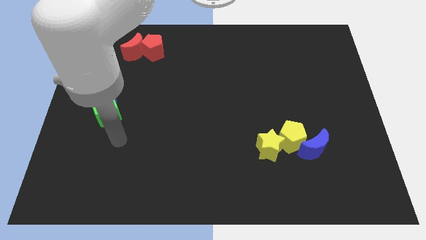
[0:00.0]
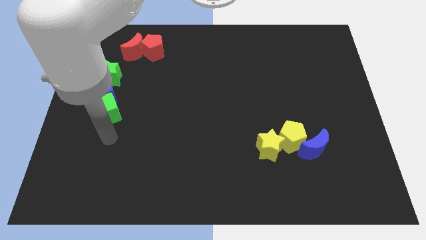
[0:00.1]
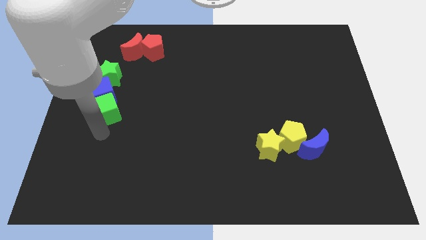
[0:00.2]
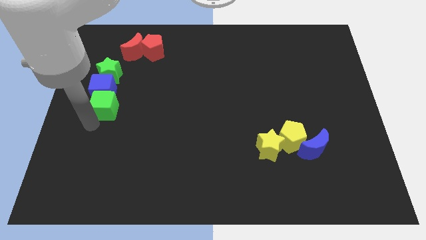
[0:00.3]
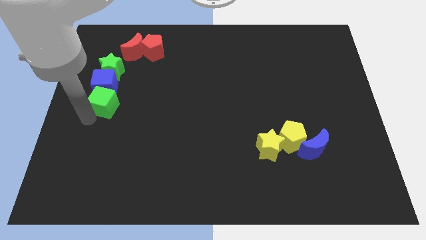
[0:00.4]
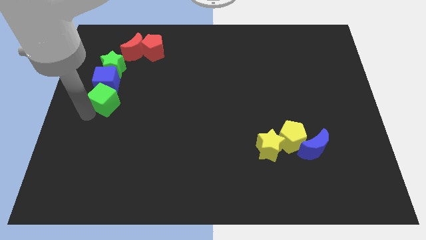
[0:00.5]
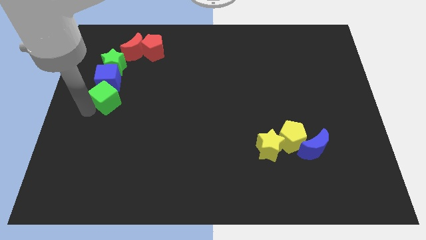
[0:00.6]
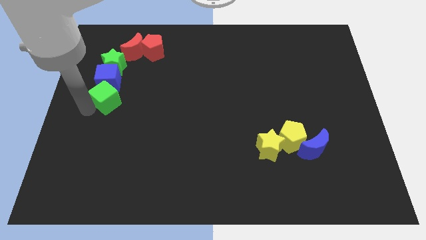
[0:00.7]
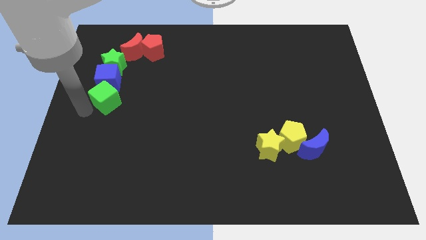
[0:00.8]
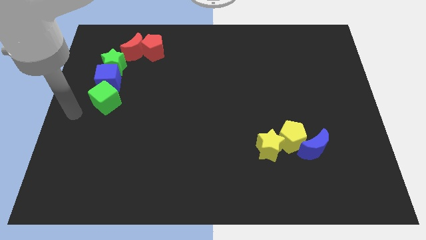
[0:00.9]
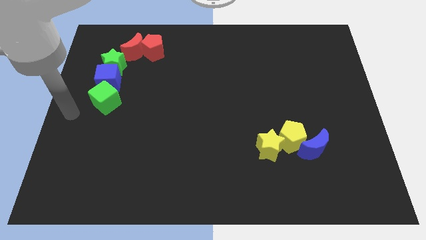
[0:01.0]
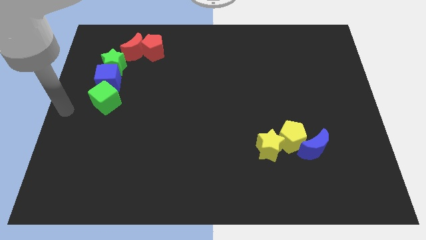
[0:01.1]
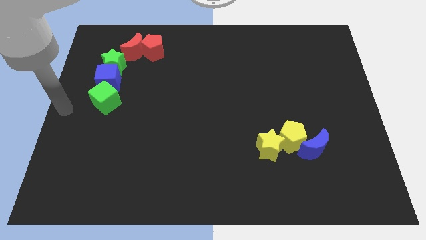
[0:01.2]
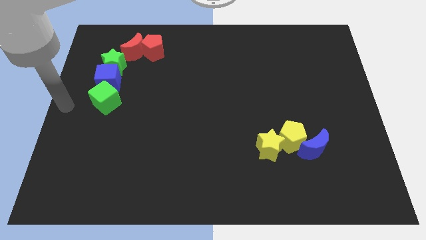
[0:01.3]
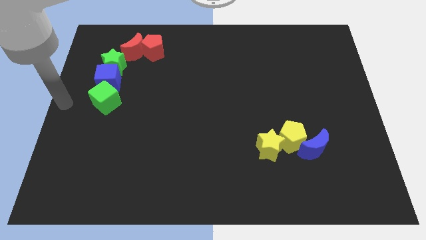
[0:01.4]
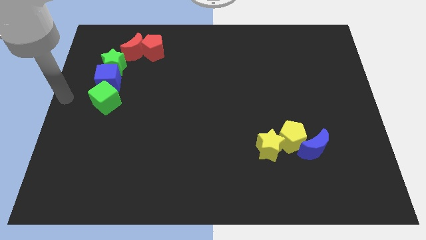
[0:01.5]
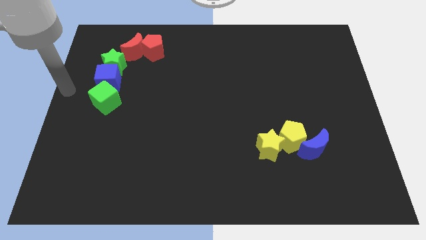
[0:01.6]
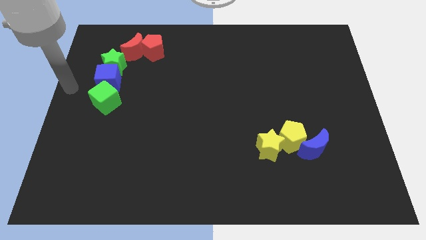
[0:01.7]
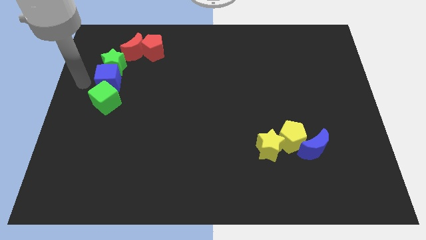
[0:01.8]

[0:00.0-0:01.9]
slide both the green blocks and blue cube to the top side of the board

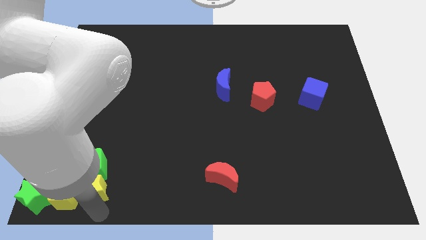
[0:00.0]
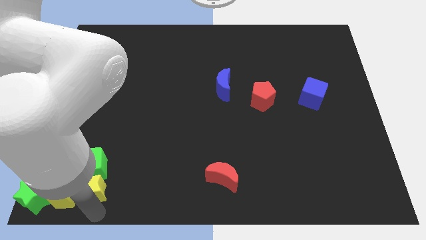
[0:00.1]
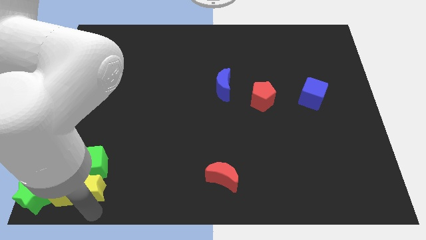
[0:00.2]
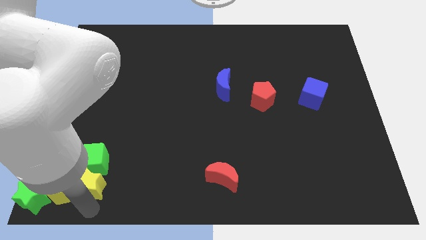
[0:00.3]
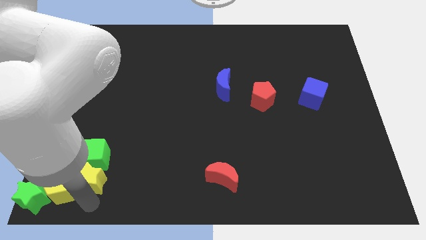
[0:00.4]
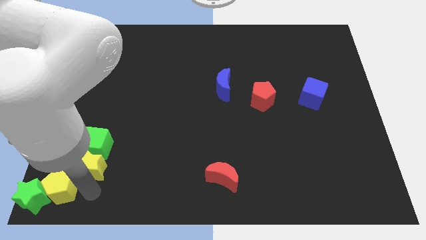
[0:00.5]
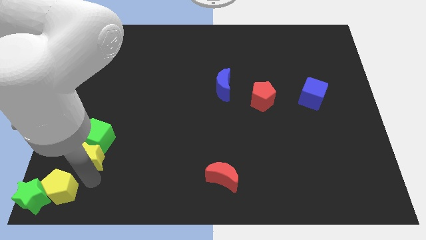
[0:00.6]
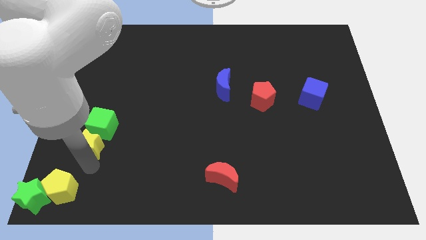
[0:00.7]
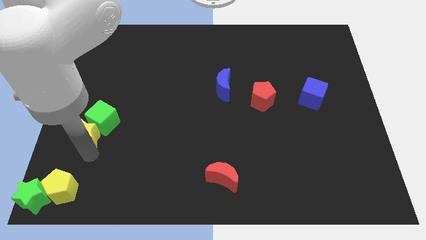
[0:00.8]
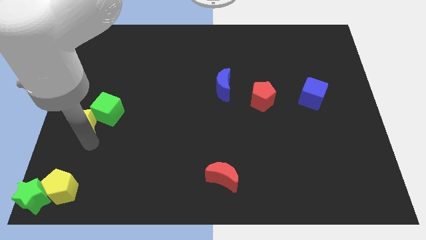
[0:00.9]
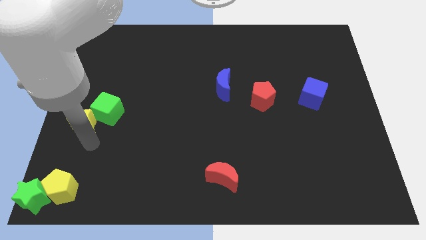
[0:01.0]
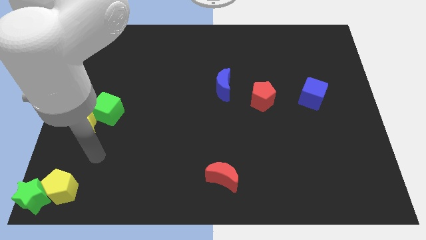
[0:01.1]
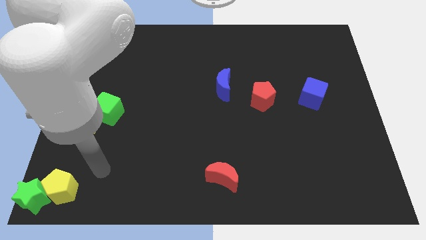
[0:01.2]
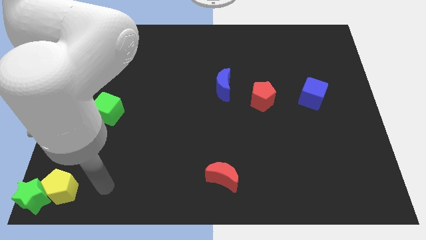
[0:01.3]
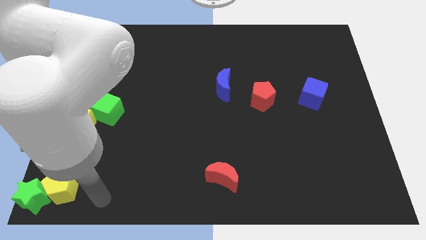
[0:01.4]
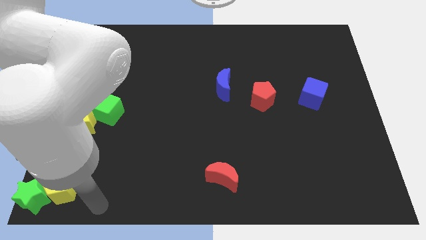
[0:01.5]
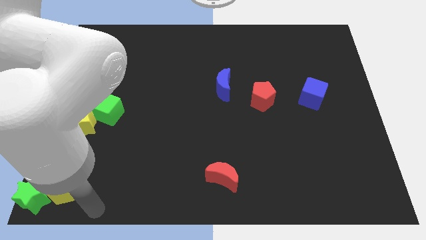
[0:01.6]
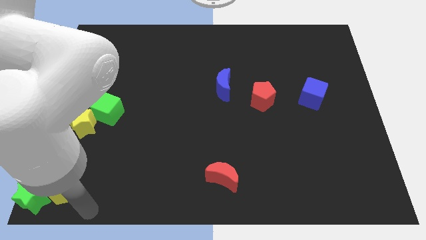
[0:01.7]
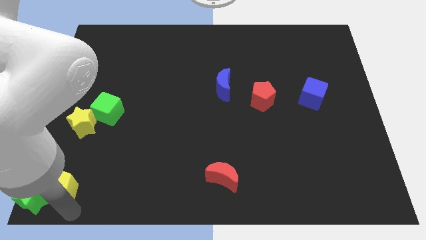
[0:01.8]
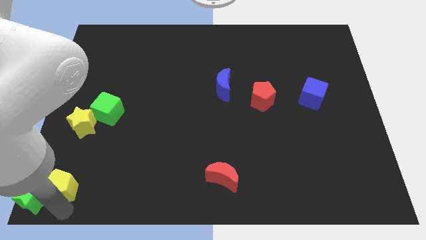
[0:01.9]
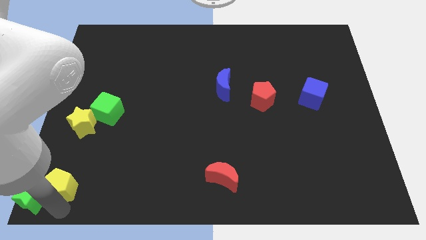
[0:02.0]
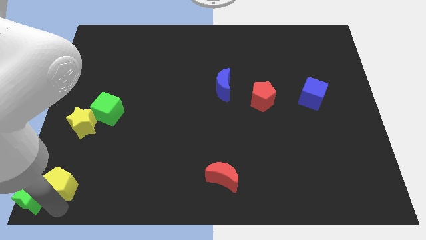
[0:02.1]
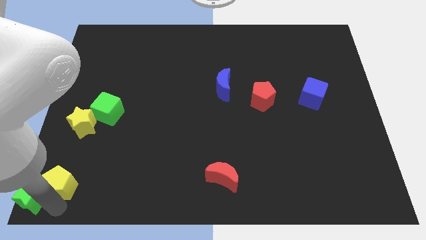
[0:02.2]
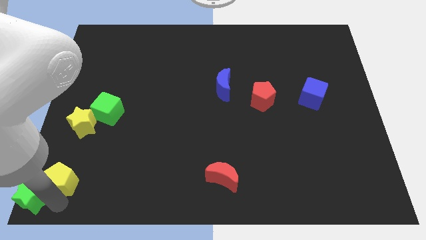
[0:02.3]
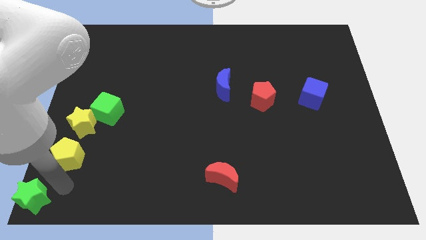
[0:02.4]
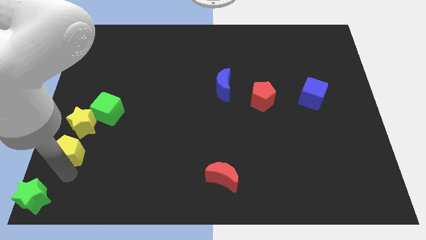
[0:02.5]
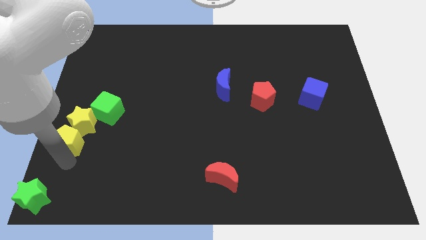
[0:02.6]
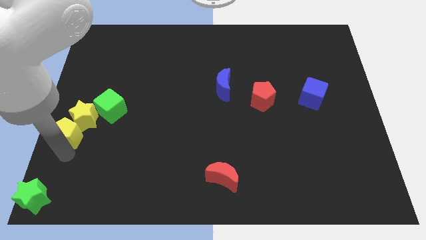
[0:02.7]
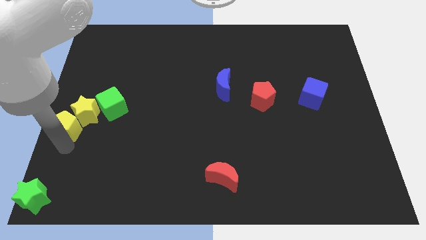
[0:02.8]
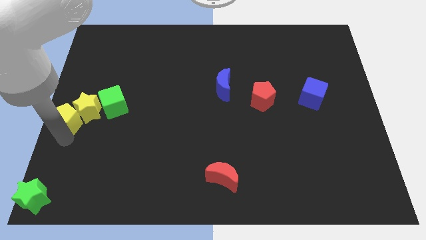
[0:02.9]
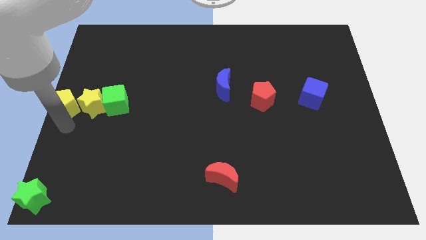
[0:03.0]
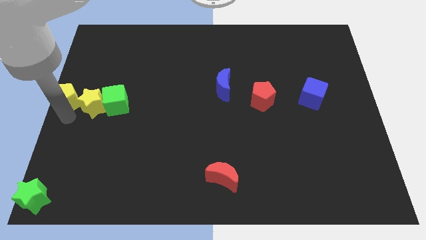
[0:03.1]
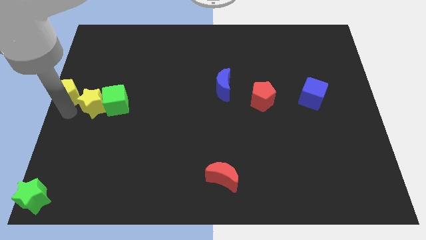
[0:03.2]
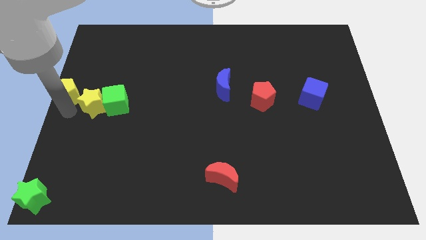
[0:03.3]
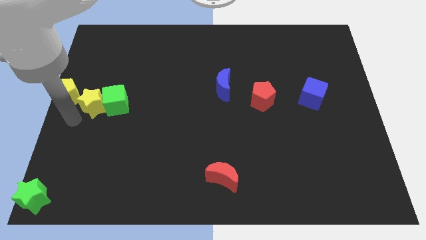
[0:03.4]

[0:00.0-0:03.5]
put the yellow star and yellow pentagon towards the left center of the board

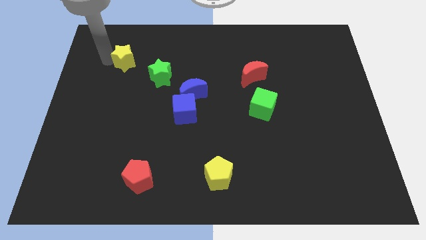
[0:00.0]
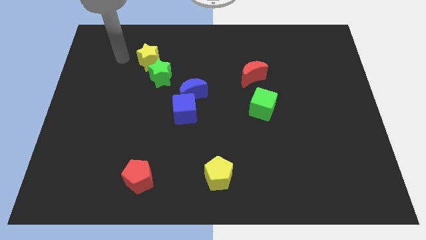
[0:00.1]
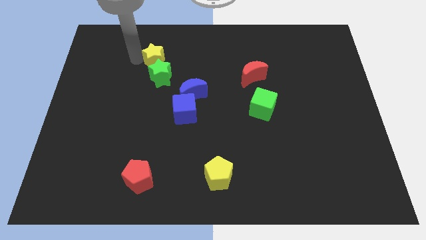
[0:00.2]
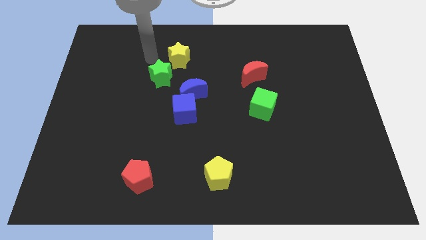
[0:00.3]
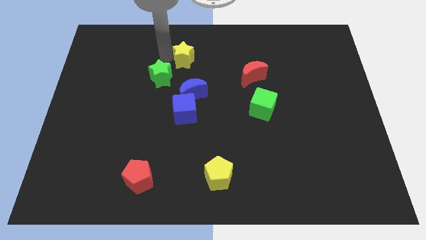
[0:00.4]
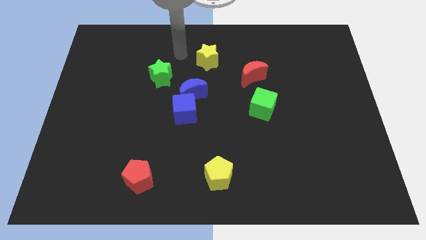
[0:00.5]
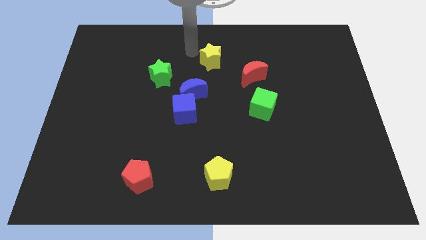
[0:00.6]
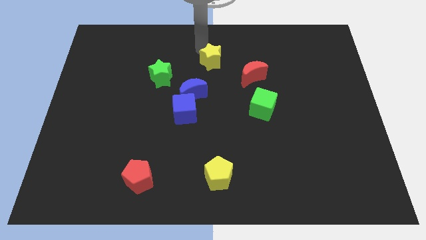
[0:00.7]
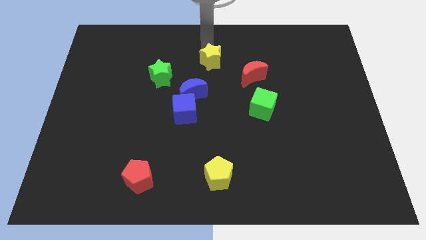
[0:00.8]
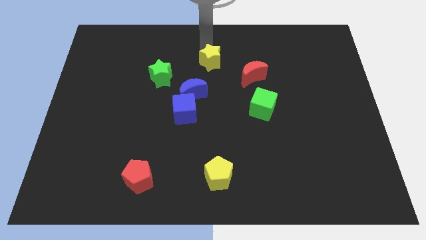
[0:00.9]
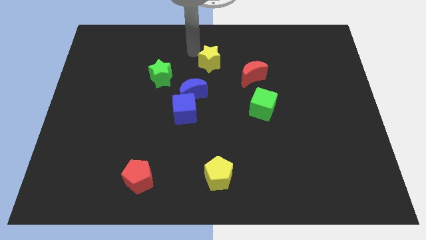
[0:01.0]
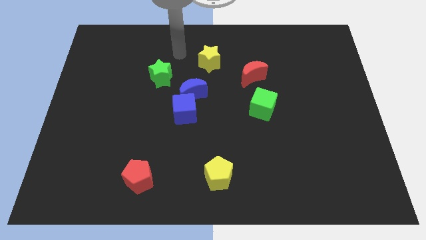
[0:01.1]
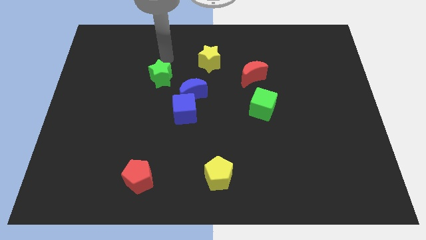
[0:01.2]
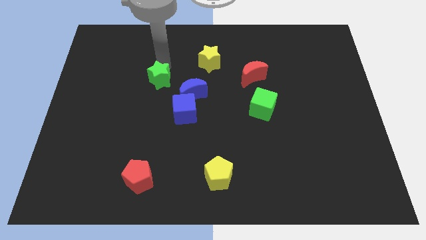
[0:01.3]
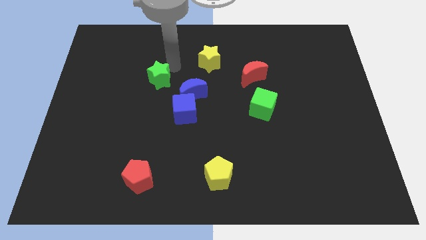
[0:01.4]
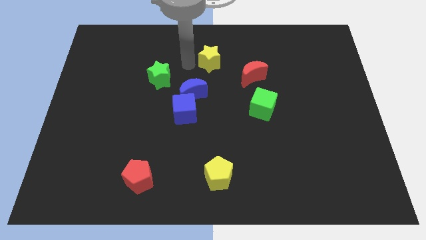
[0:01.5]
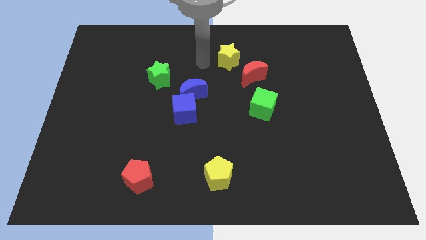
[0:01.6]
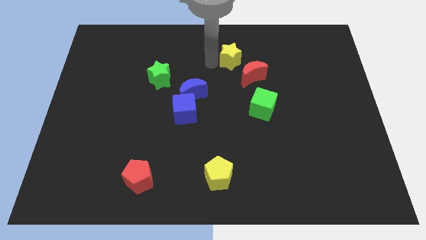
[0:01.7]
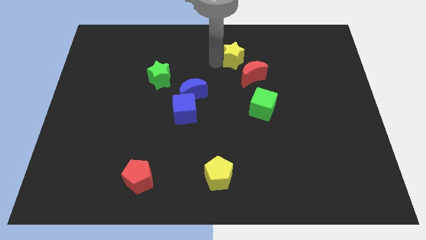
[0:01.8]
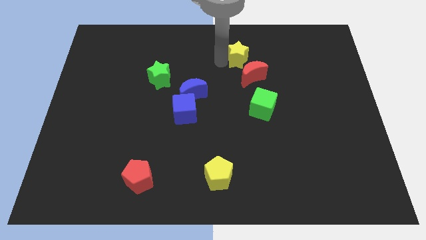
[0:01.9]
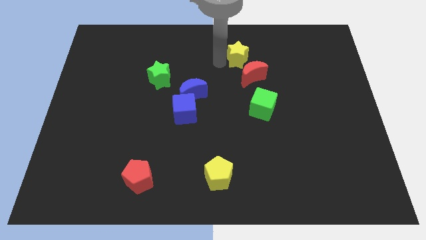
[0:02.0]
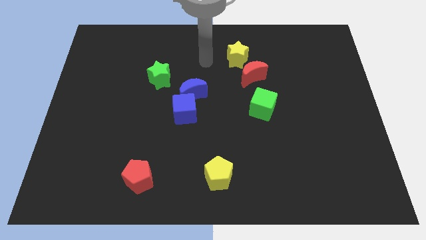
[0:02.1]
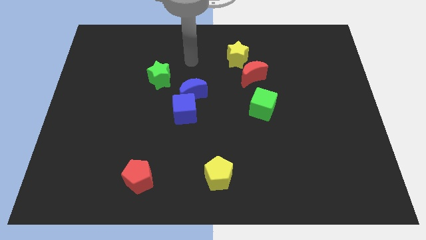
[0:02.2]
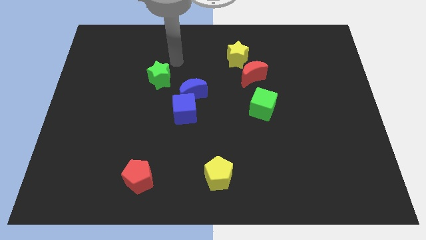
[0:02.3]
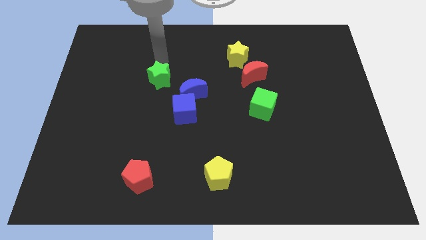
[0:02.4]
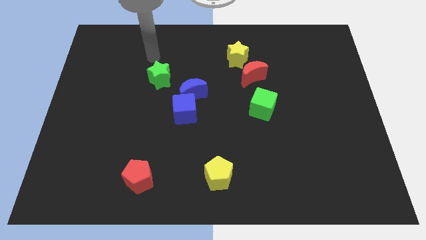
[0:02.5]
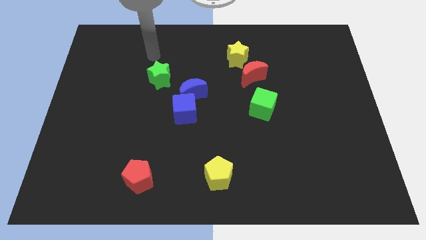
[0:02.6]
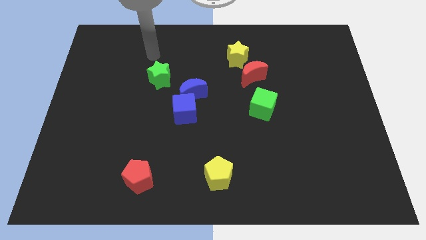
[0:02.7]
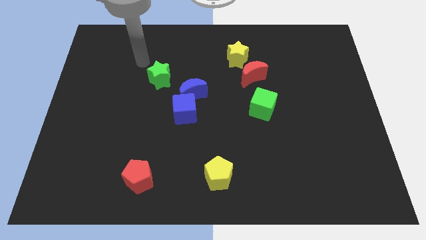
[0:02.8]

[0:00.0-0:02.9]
move yellow star above red moon

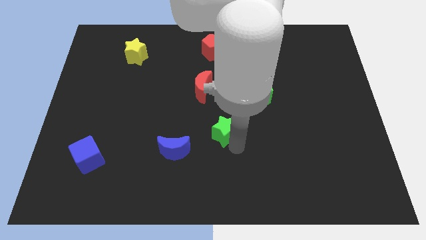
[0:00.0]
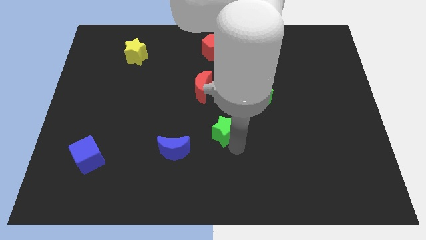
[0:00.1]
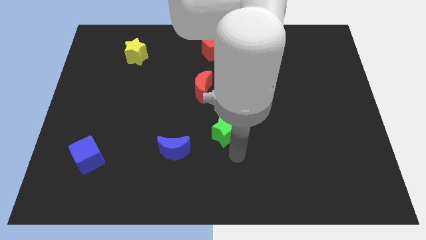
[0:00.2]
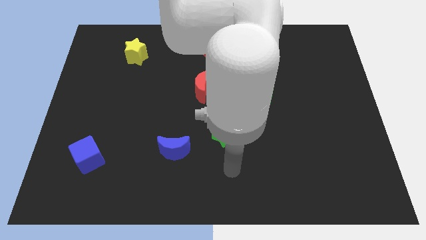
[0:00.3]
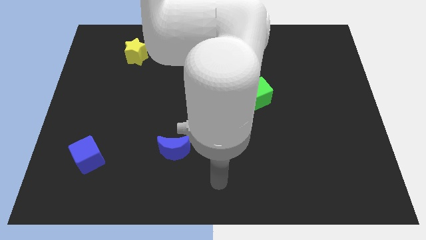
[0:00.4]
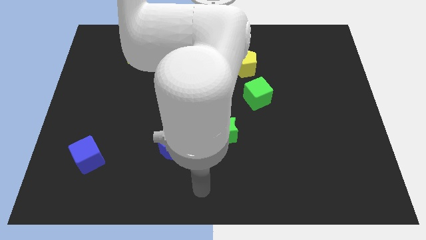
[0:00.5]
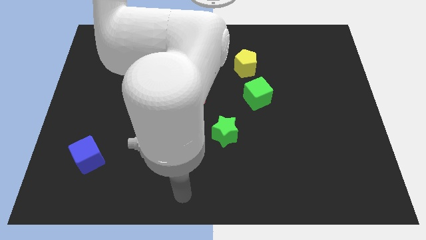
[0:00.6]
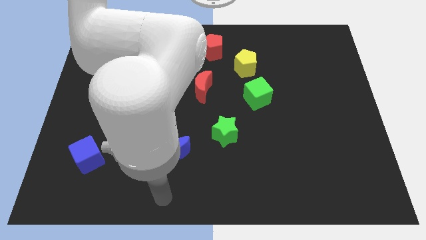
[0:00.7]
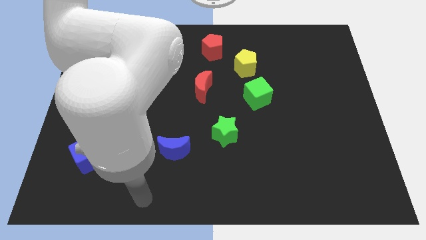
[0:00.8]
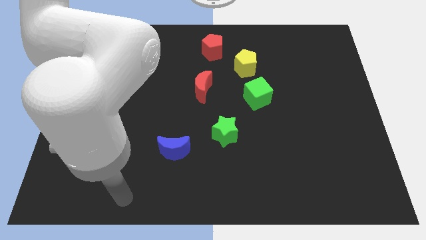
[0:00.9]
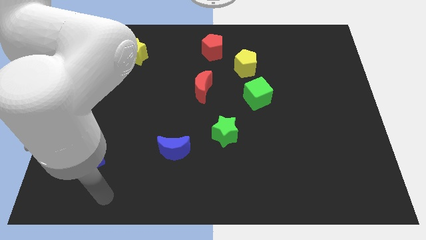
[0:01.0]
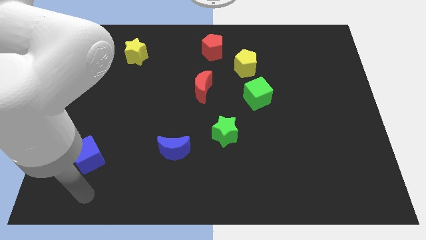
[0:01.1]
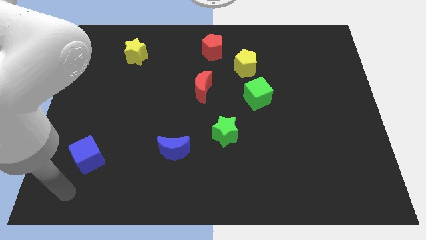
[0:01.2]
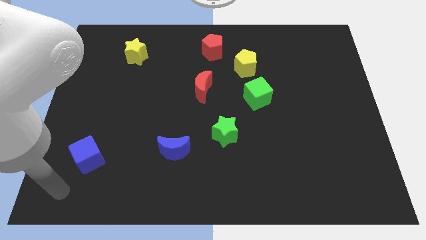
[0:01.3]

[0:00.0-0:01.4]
move your arm away from the green star
